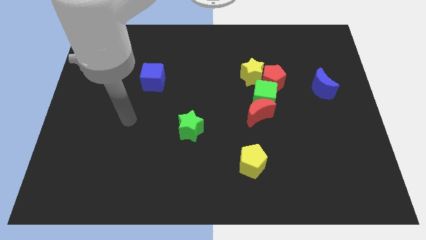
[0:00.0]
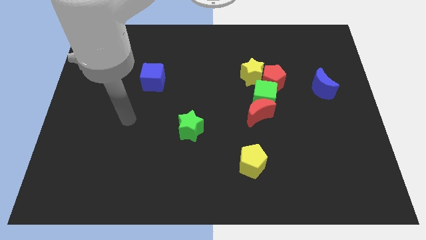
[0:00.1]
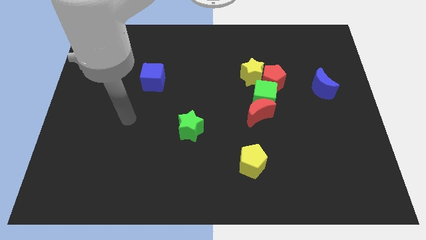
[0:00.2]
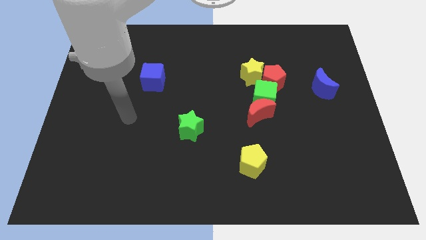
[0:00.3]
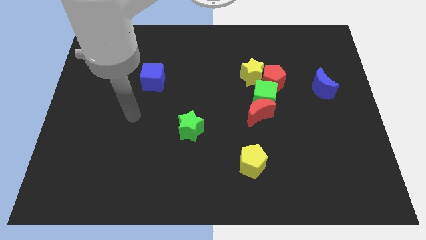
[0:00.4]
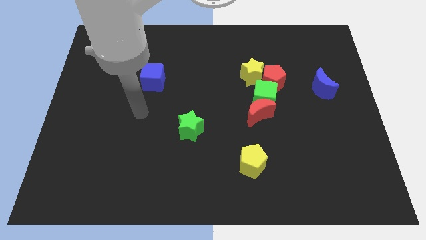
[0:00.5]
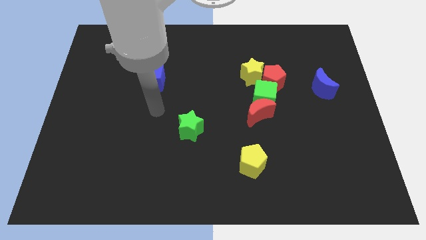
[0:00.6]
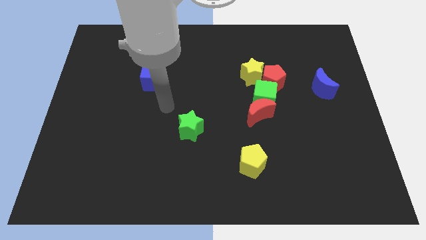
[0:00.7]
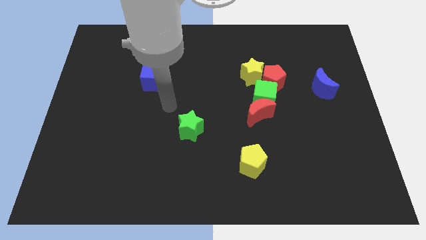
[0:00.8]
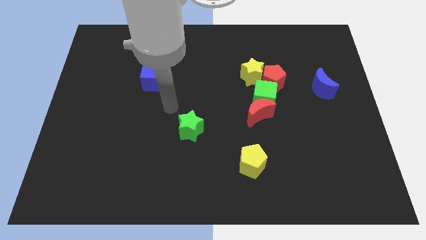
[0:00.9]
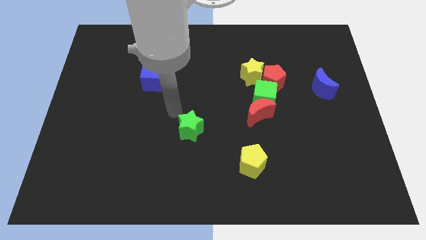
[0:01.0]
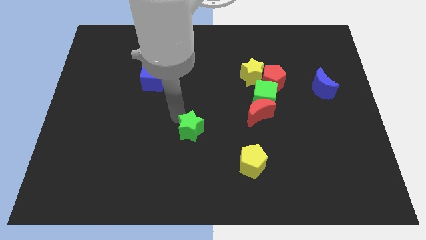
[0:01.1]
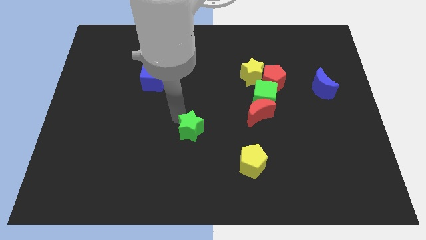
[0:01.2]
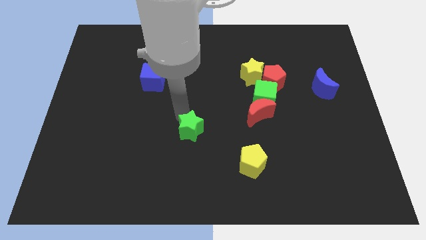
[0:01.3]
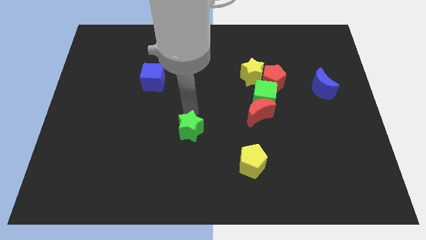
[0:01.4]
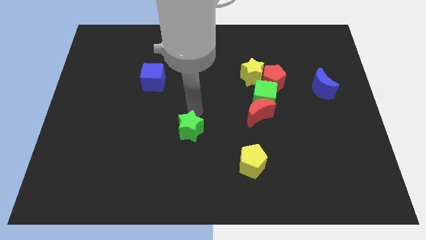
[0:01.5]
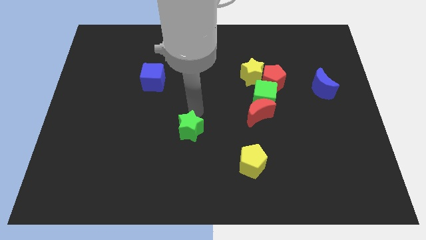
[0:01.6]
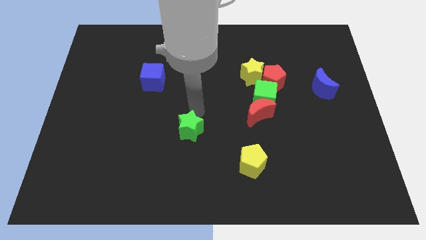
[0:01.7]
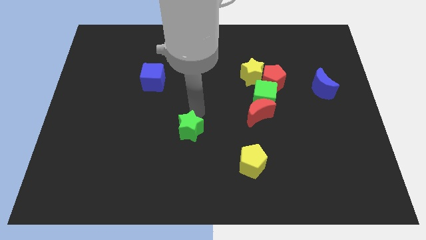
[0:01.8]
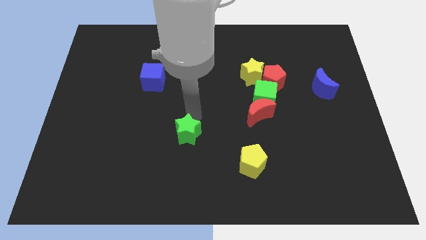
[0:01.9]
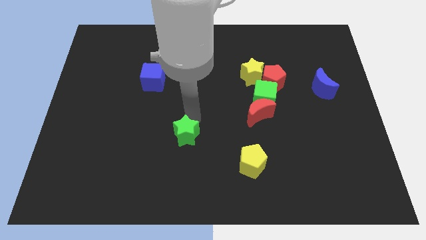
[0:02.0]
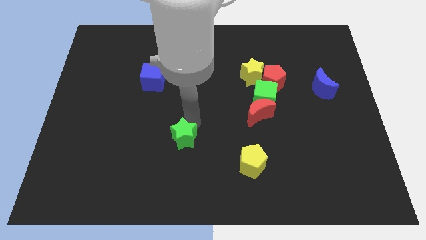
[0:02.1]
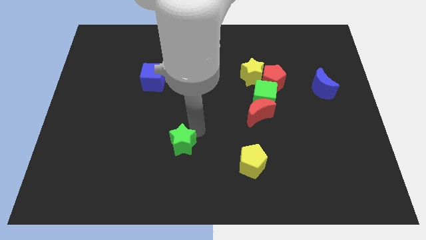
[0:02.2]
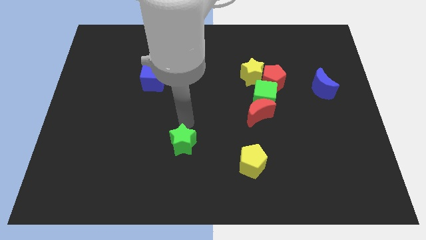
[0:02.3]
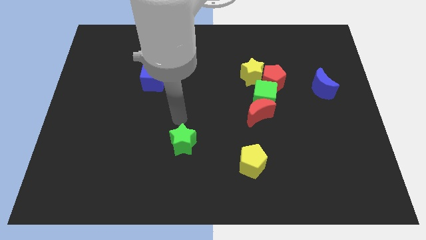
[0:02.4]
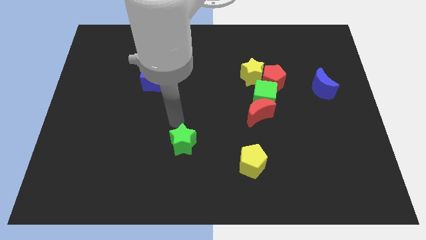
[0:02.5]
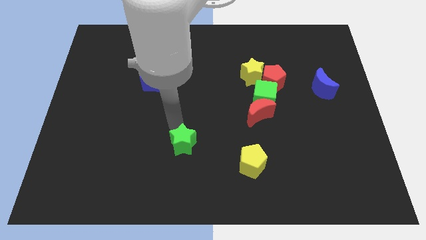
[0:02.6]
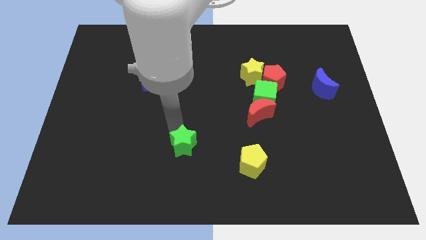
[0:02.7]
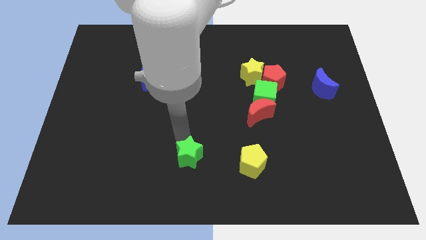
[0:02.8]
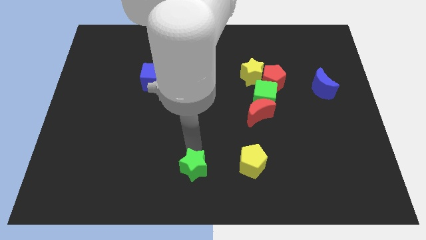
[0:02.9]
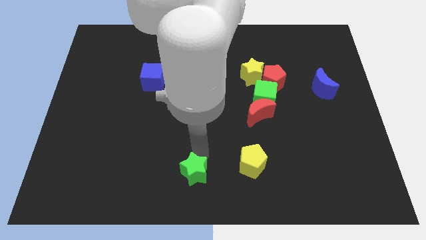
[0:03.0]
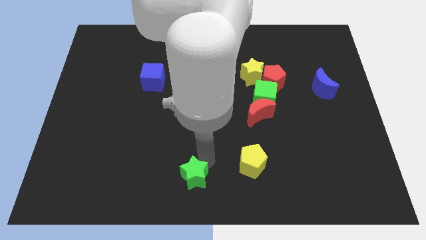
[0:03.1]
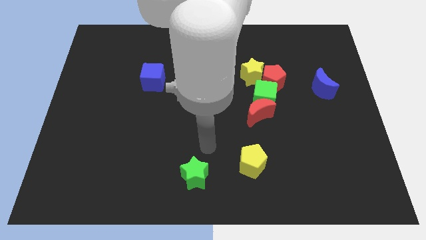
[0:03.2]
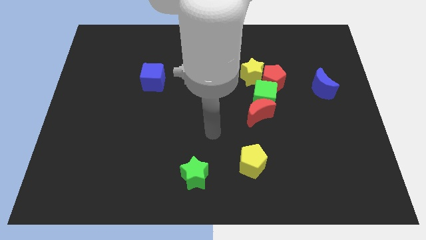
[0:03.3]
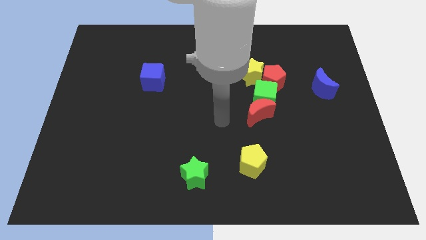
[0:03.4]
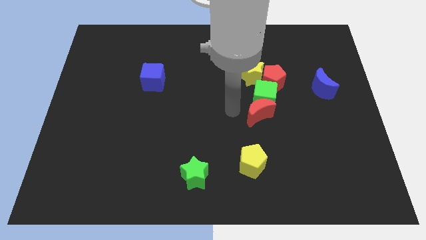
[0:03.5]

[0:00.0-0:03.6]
drag the green star to the bottom side

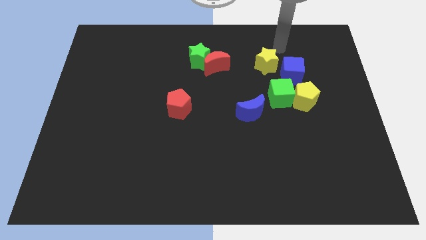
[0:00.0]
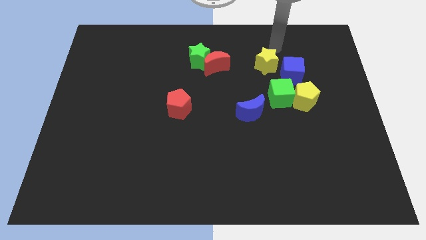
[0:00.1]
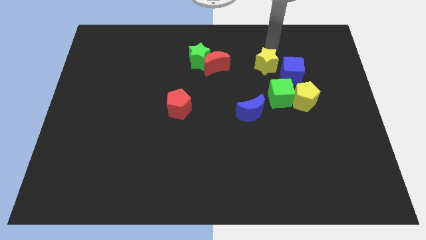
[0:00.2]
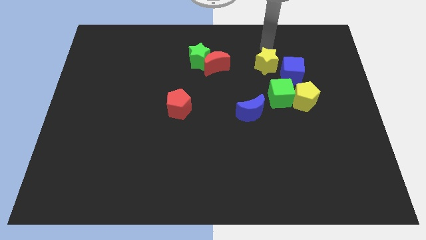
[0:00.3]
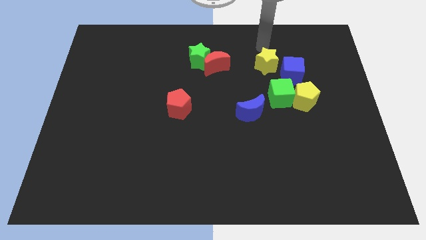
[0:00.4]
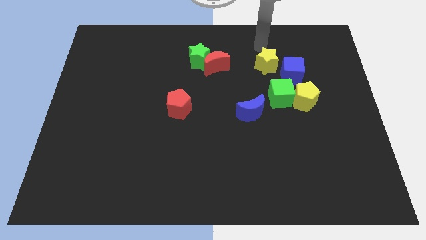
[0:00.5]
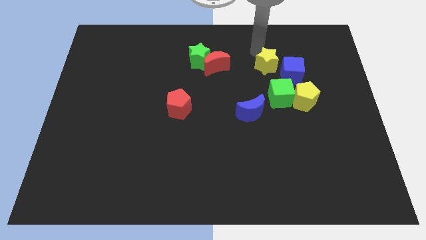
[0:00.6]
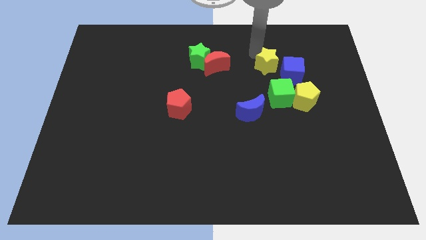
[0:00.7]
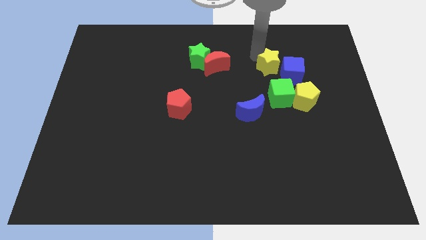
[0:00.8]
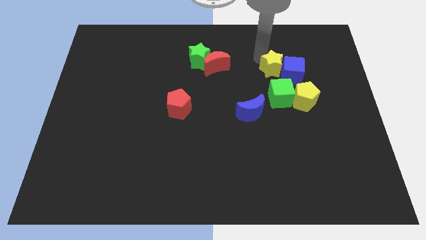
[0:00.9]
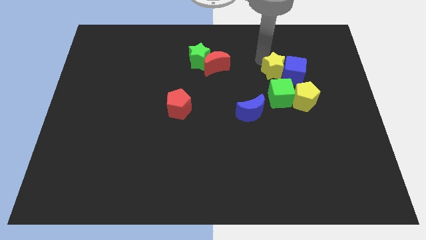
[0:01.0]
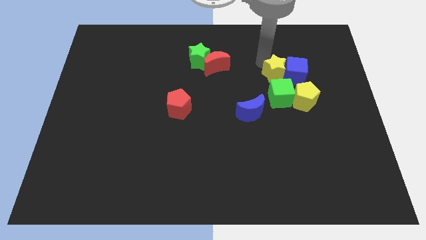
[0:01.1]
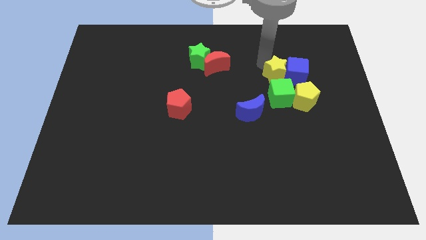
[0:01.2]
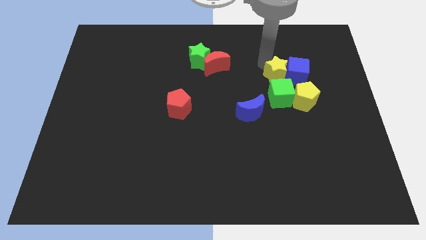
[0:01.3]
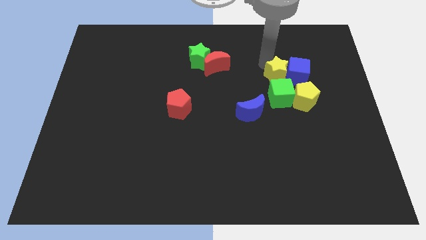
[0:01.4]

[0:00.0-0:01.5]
place yellow star to the left of blue cube

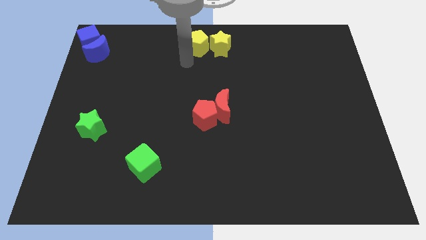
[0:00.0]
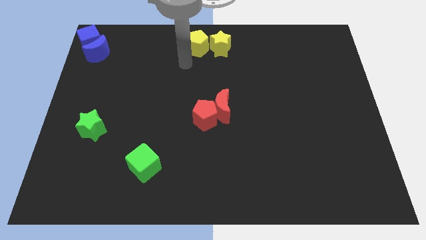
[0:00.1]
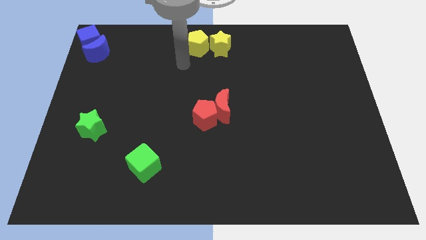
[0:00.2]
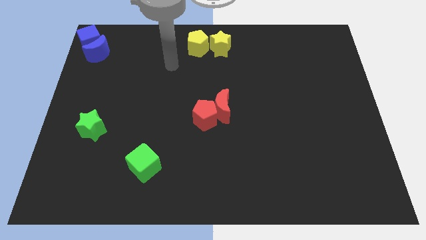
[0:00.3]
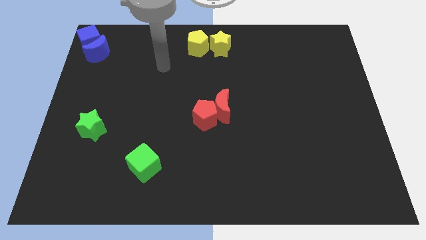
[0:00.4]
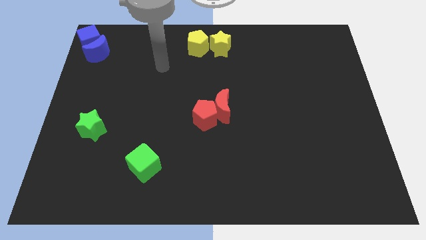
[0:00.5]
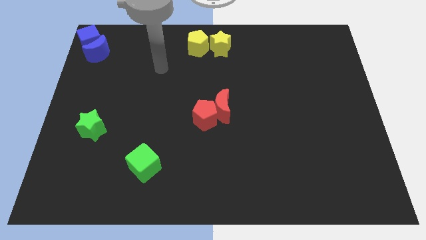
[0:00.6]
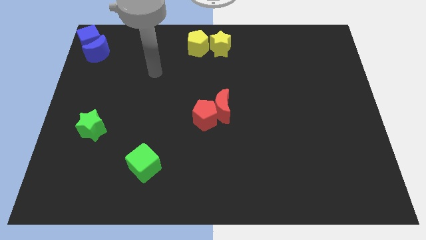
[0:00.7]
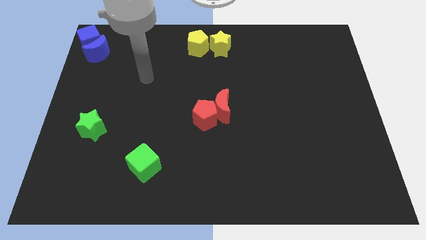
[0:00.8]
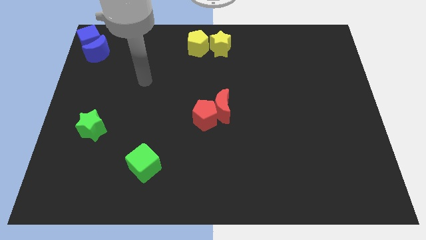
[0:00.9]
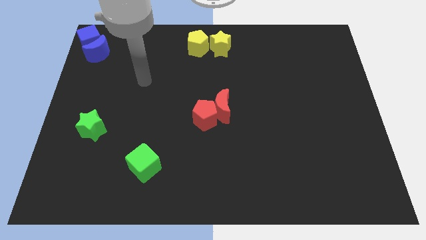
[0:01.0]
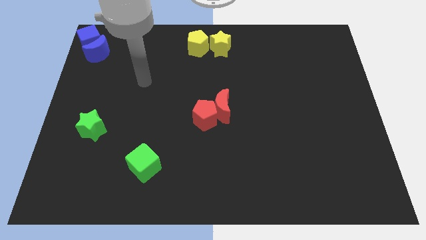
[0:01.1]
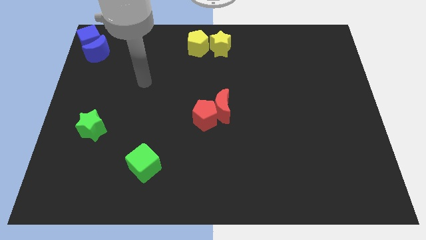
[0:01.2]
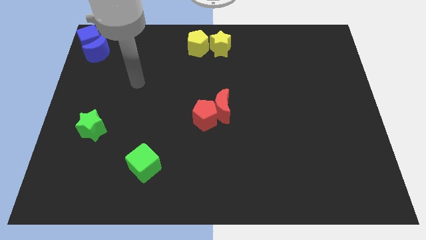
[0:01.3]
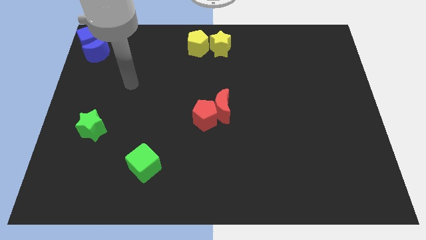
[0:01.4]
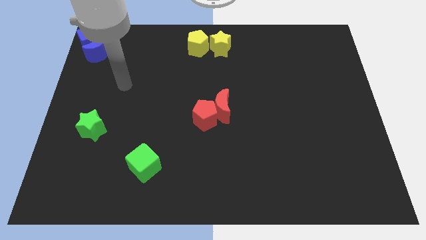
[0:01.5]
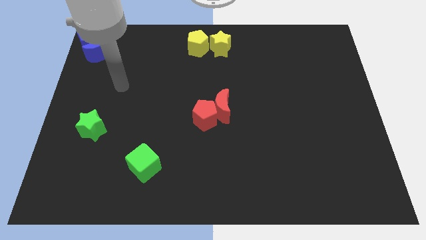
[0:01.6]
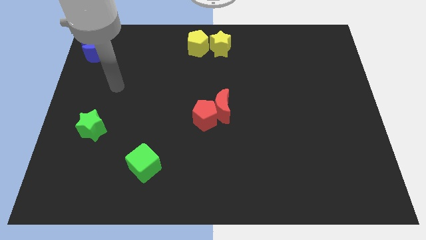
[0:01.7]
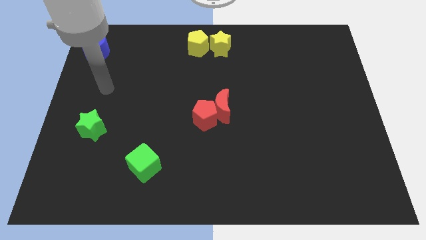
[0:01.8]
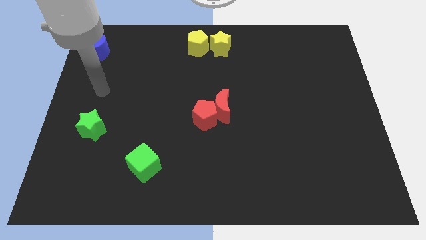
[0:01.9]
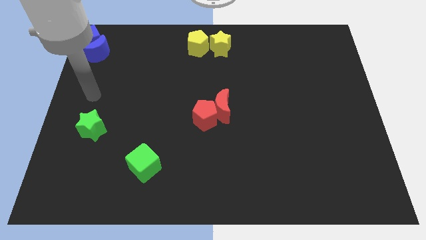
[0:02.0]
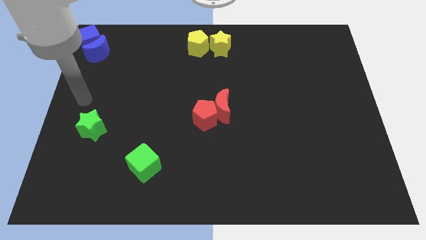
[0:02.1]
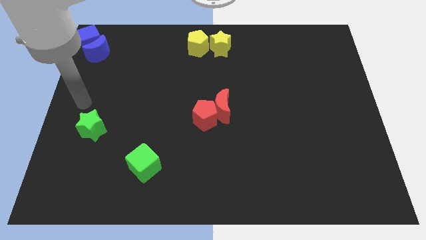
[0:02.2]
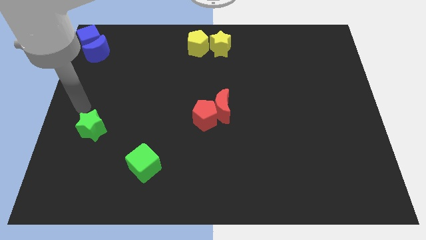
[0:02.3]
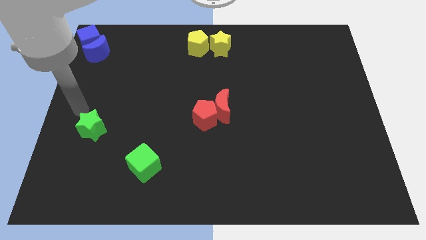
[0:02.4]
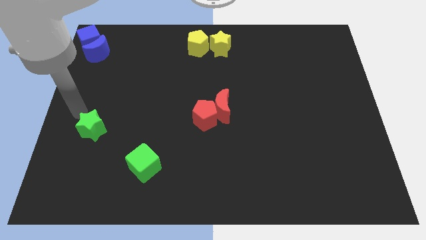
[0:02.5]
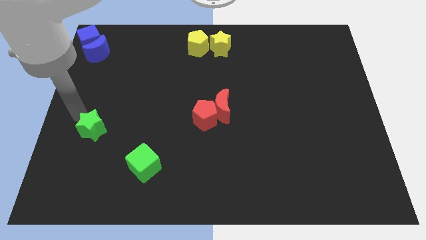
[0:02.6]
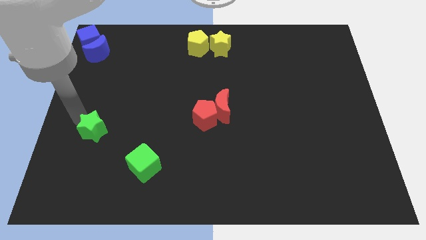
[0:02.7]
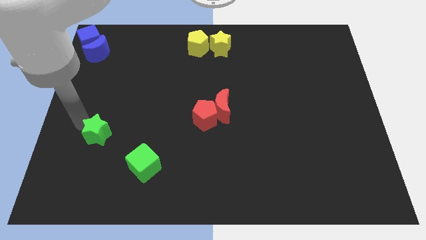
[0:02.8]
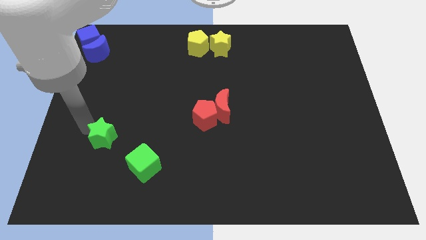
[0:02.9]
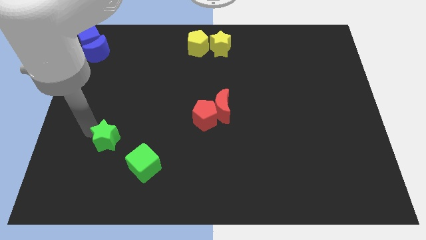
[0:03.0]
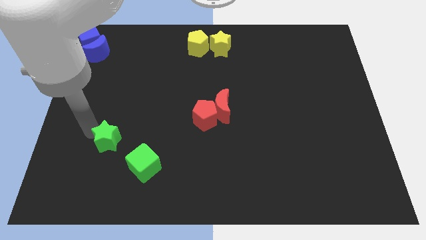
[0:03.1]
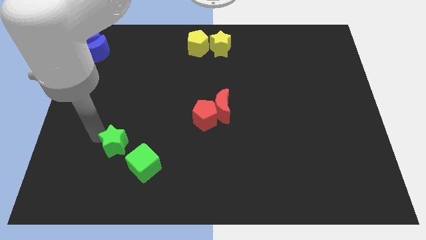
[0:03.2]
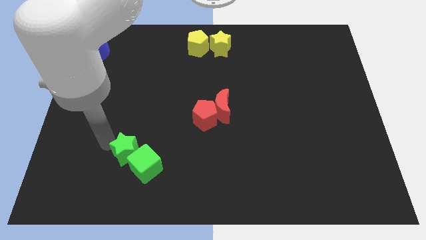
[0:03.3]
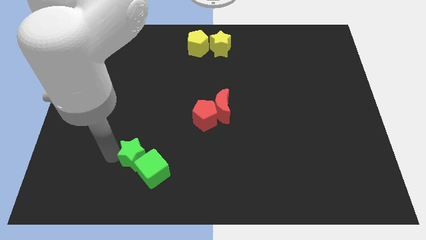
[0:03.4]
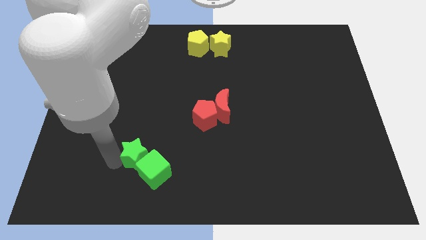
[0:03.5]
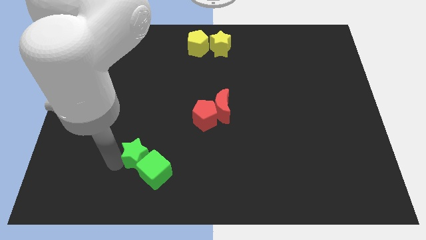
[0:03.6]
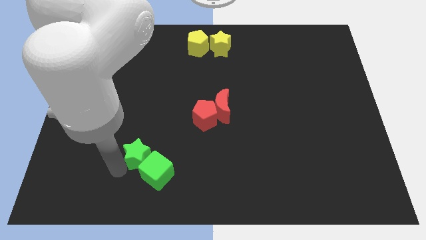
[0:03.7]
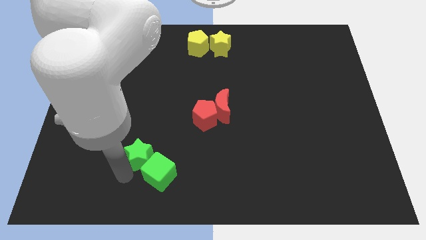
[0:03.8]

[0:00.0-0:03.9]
push the green star into the green cube
